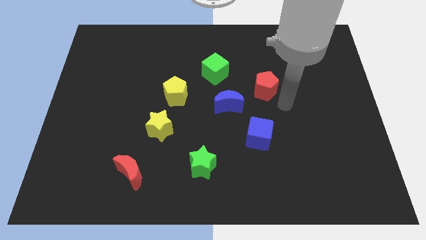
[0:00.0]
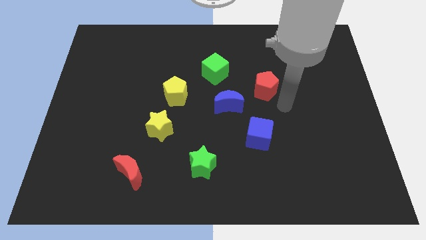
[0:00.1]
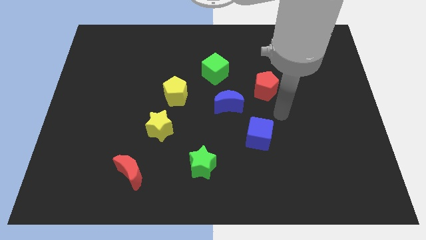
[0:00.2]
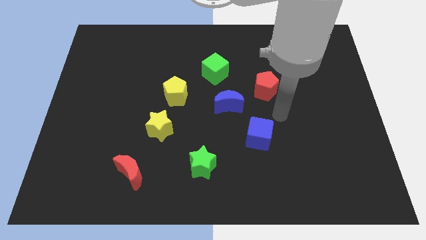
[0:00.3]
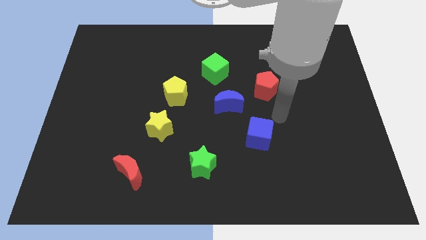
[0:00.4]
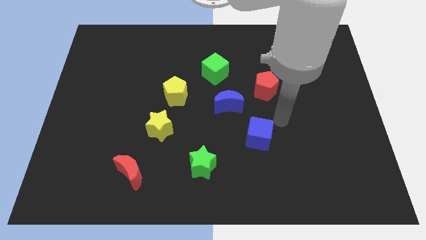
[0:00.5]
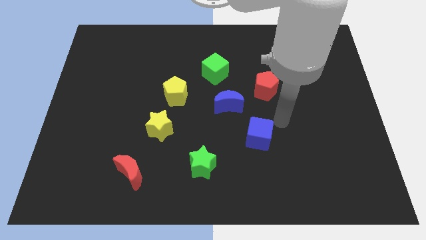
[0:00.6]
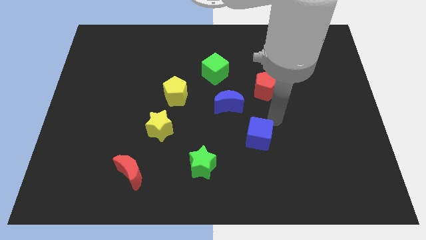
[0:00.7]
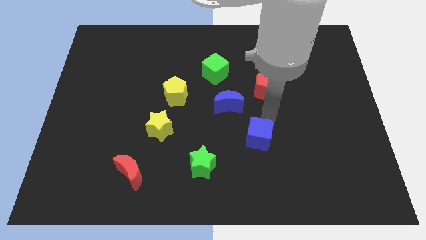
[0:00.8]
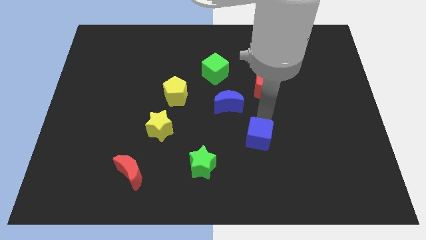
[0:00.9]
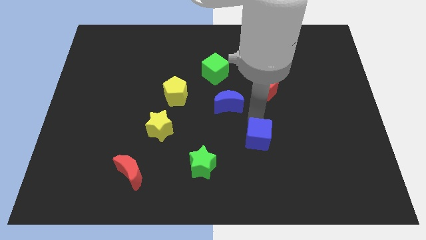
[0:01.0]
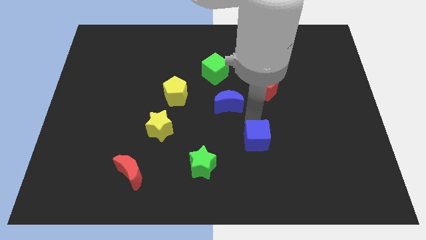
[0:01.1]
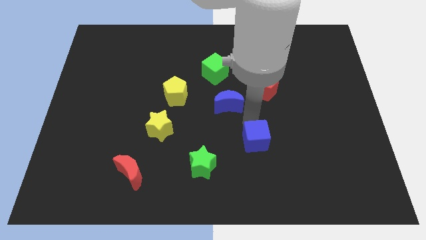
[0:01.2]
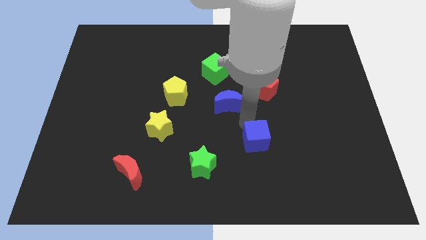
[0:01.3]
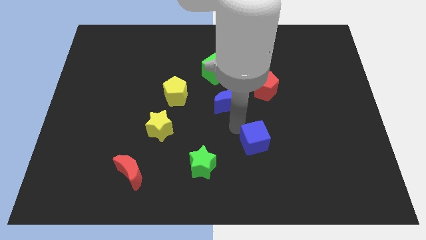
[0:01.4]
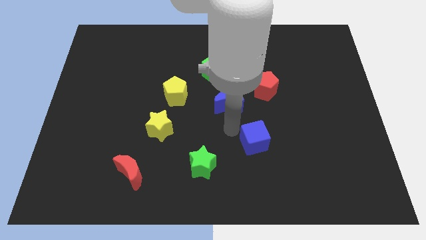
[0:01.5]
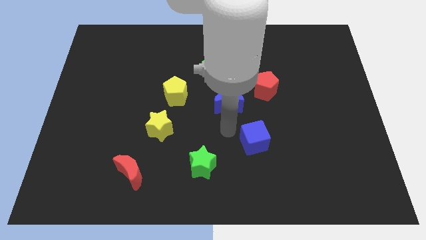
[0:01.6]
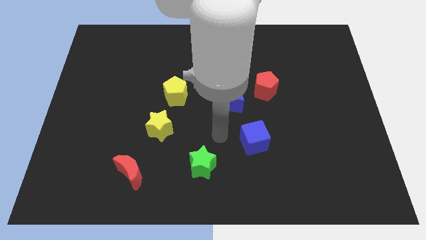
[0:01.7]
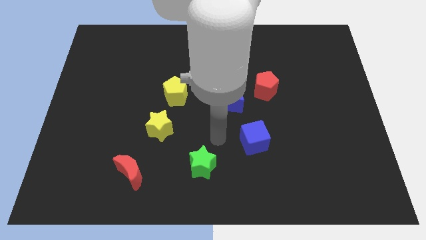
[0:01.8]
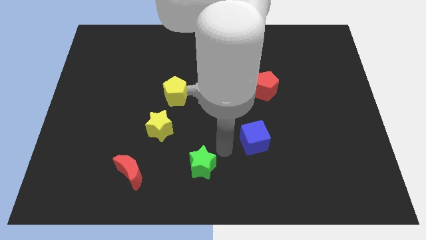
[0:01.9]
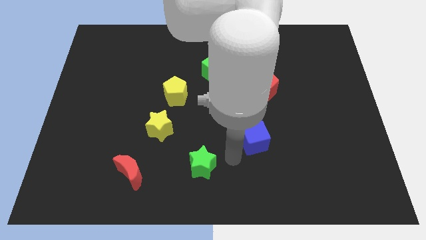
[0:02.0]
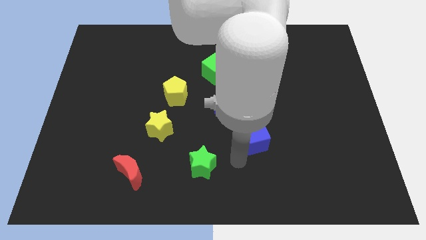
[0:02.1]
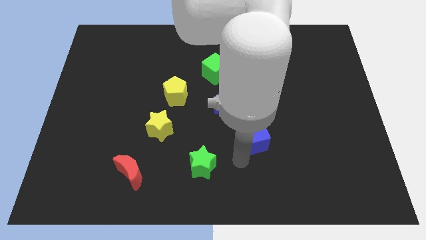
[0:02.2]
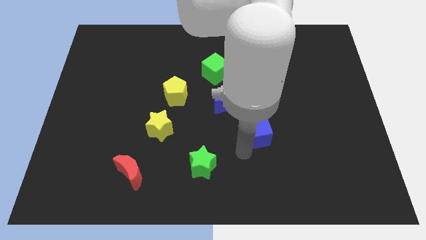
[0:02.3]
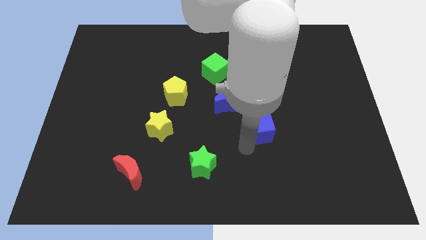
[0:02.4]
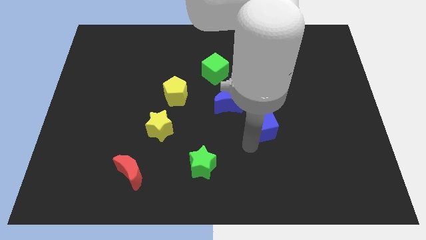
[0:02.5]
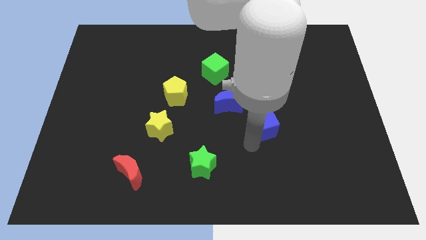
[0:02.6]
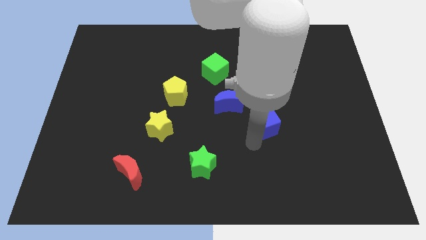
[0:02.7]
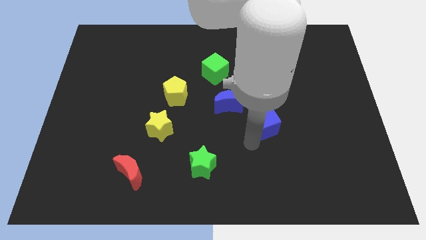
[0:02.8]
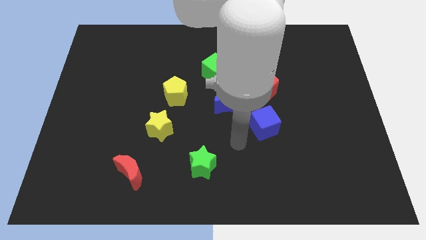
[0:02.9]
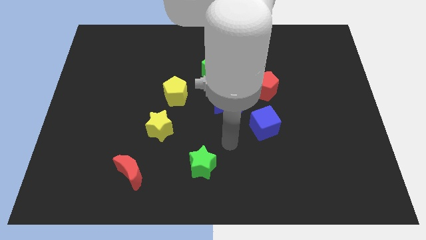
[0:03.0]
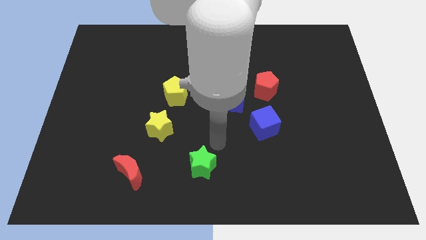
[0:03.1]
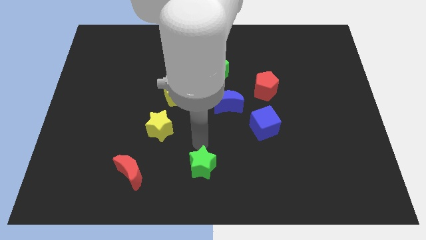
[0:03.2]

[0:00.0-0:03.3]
move the blue cube to the bottom right side of the blue moon

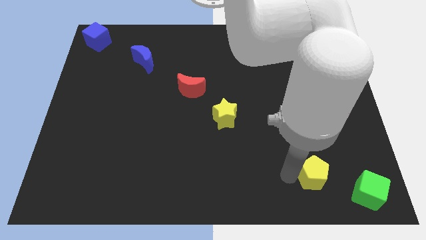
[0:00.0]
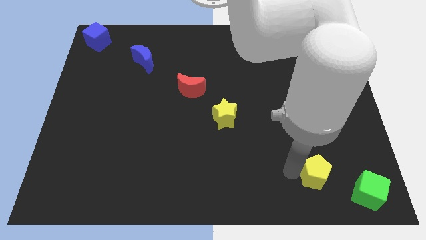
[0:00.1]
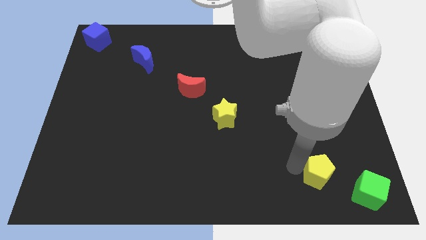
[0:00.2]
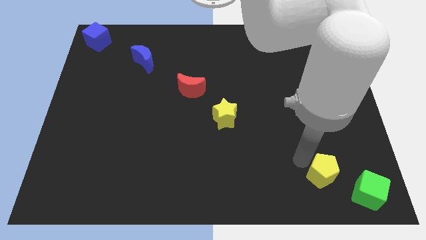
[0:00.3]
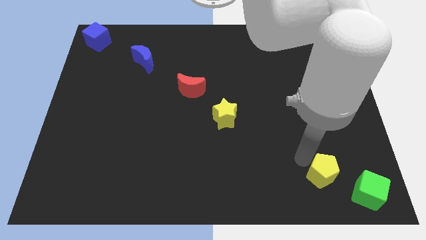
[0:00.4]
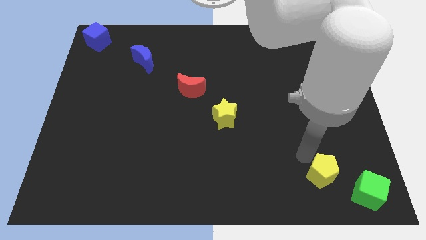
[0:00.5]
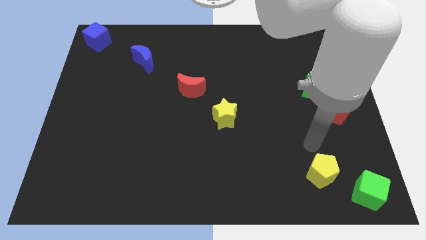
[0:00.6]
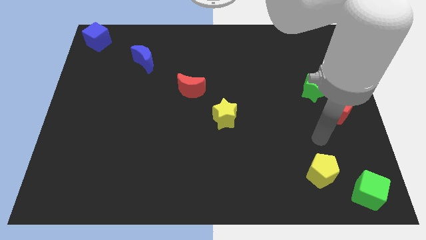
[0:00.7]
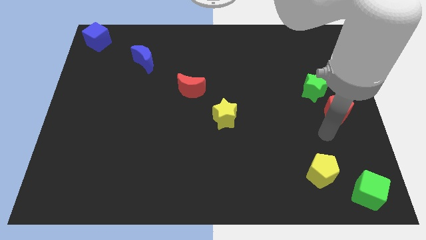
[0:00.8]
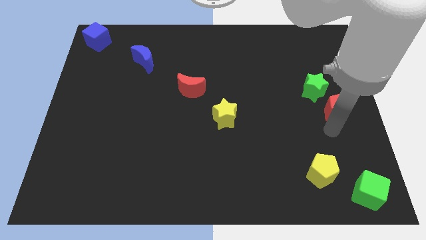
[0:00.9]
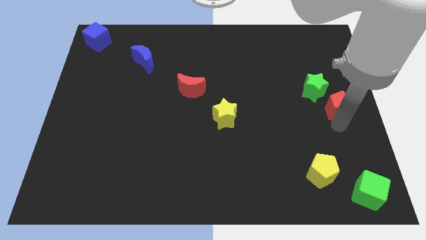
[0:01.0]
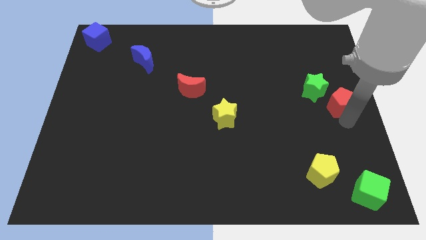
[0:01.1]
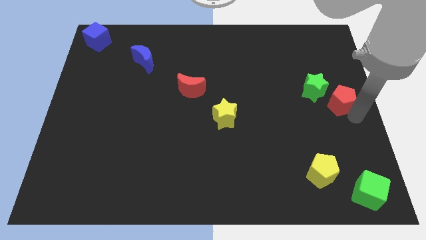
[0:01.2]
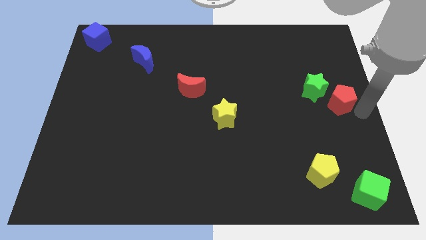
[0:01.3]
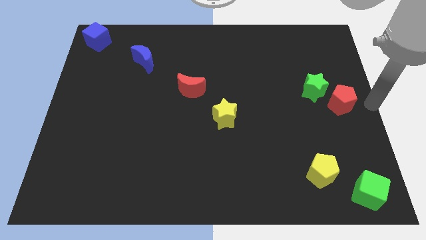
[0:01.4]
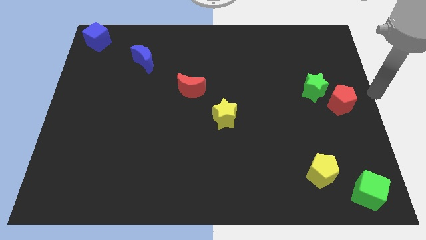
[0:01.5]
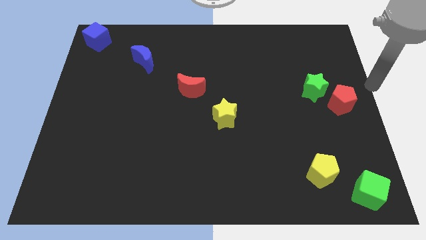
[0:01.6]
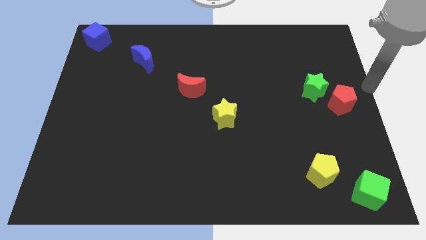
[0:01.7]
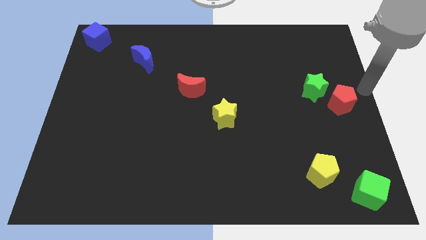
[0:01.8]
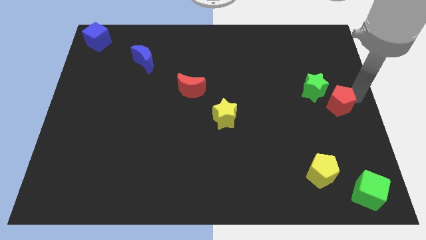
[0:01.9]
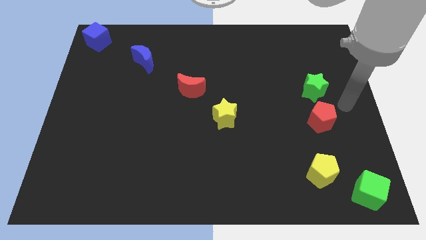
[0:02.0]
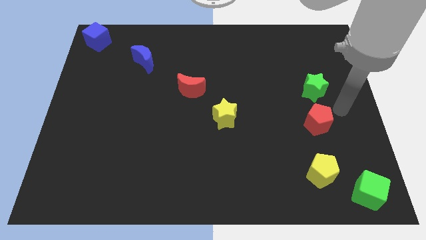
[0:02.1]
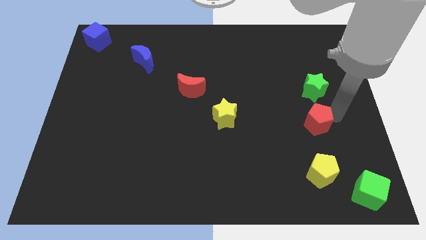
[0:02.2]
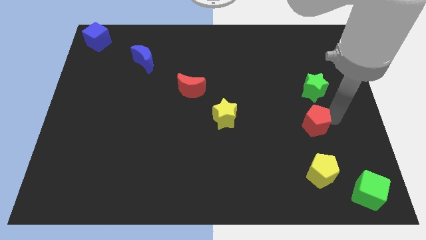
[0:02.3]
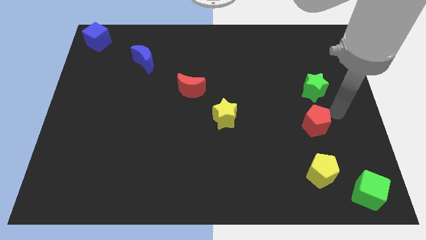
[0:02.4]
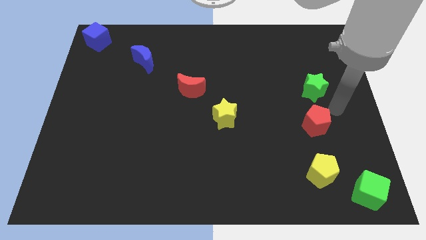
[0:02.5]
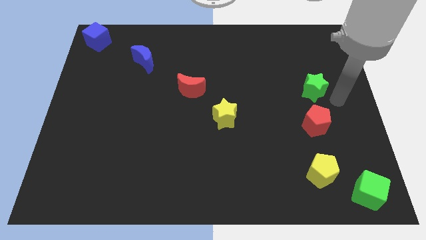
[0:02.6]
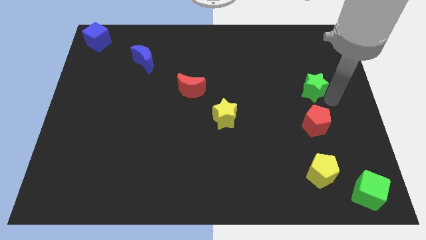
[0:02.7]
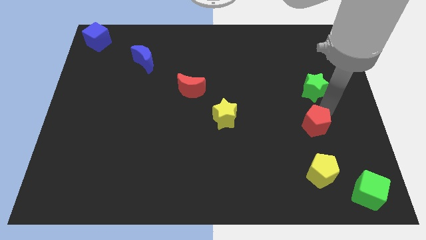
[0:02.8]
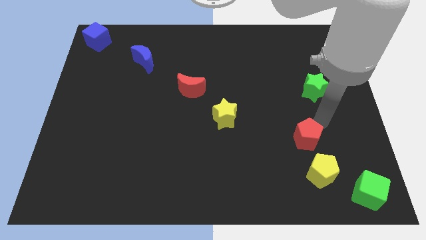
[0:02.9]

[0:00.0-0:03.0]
place red pentagon below green star

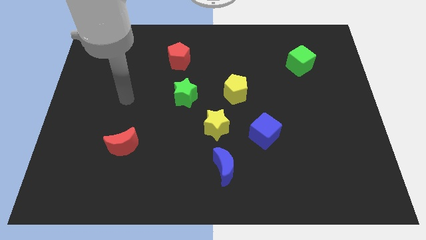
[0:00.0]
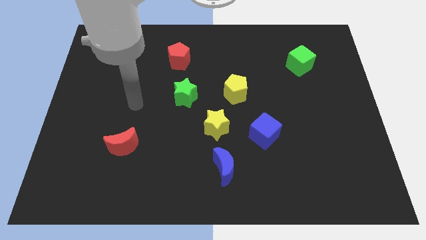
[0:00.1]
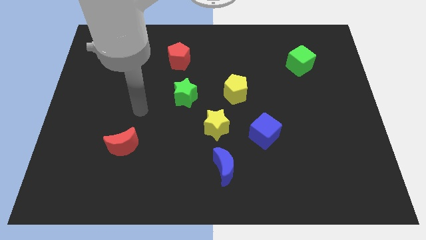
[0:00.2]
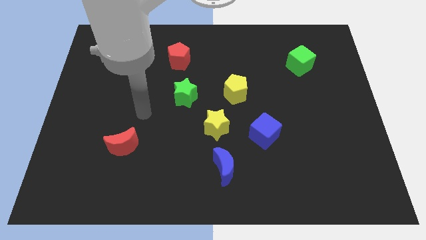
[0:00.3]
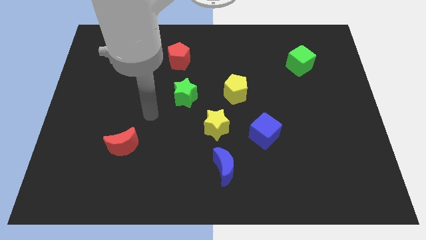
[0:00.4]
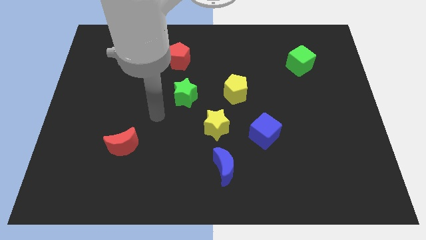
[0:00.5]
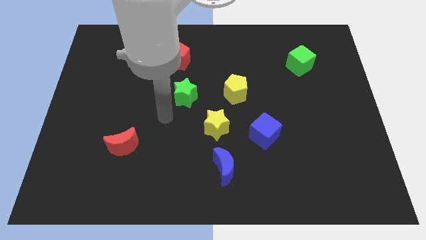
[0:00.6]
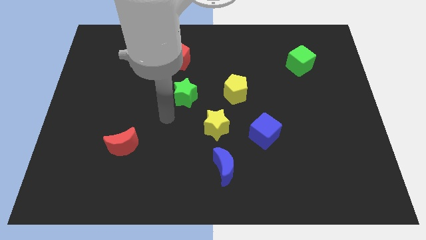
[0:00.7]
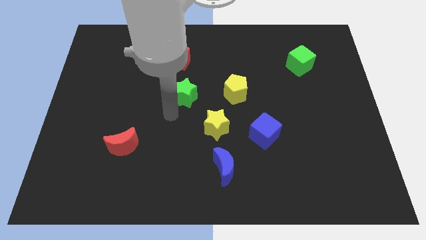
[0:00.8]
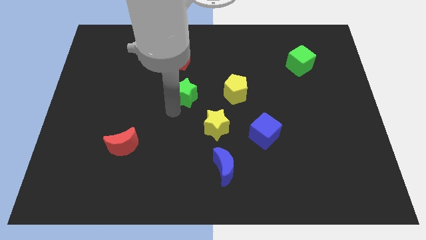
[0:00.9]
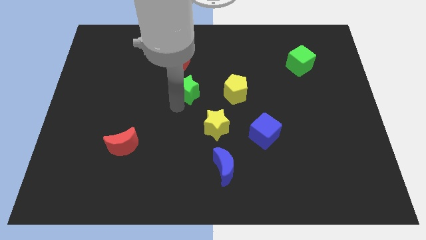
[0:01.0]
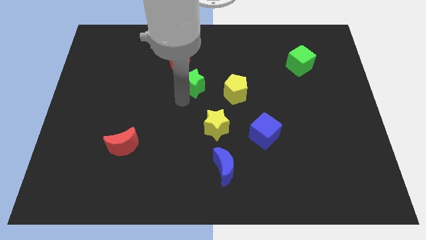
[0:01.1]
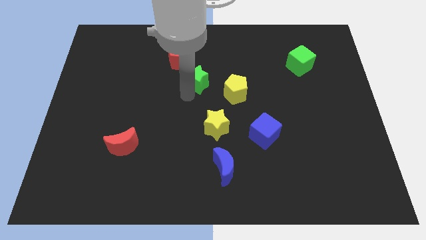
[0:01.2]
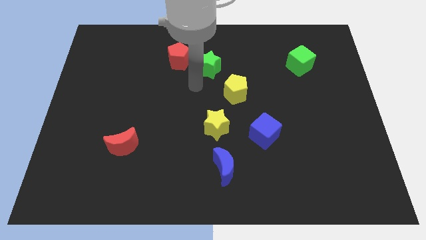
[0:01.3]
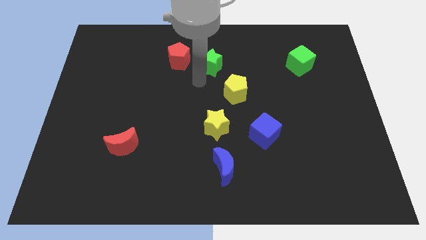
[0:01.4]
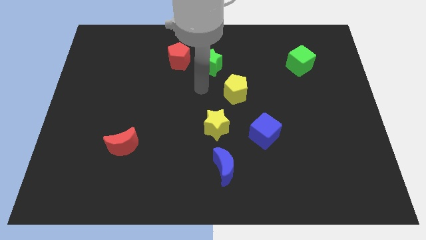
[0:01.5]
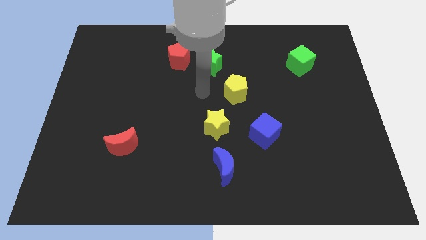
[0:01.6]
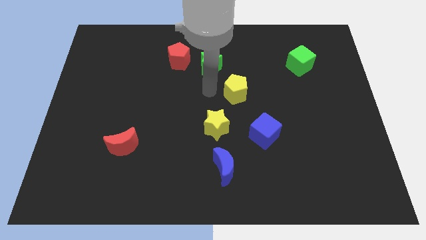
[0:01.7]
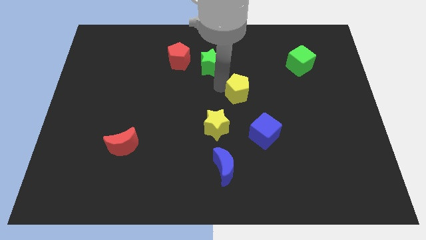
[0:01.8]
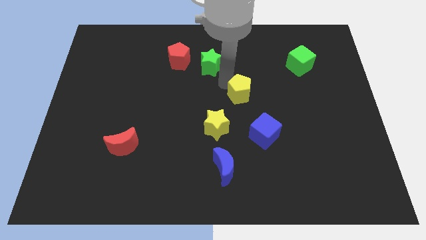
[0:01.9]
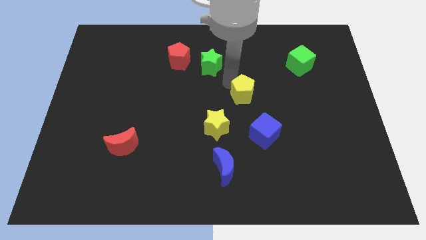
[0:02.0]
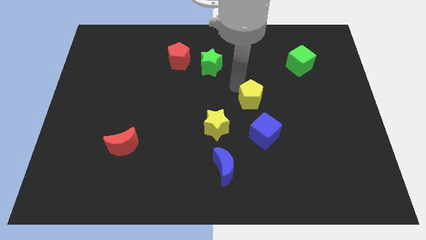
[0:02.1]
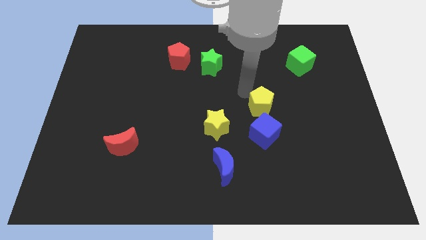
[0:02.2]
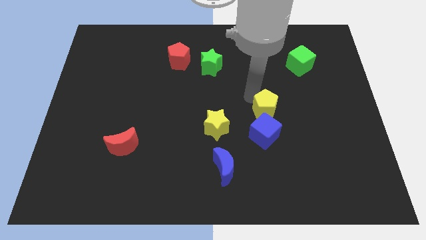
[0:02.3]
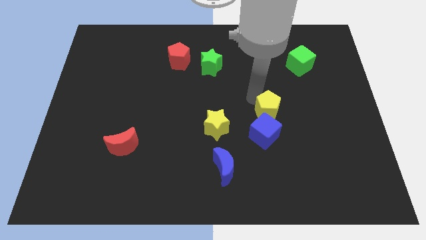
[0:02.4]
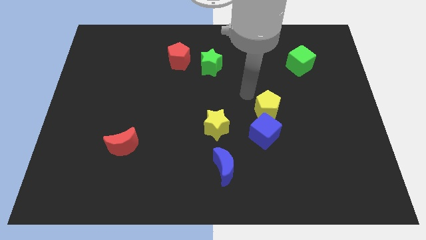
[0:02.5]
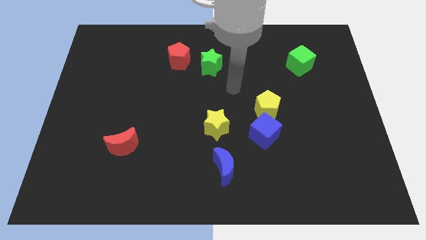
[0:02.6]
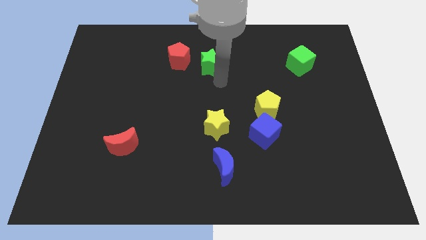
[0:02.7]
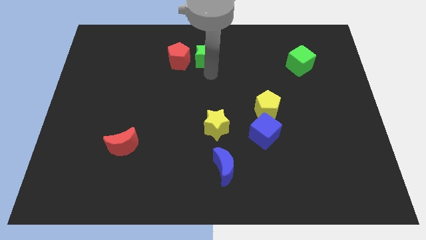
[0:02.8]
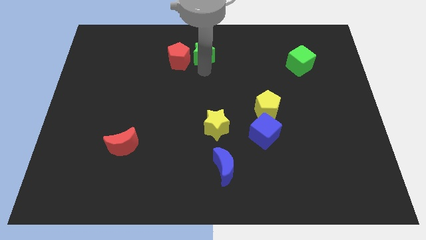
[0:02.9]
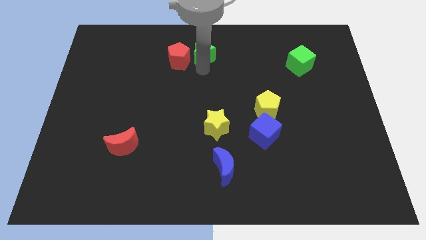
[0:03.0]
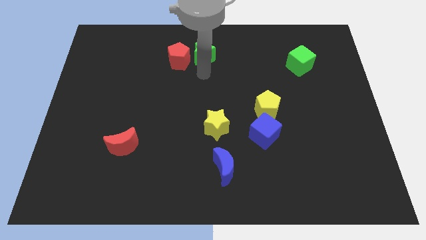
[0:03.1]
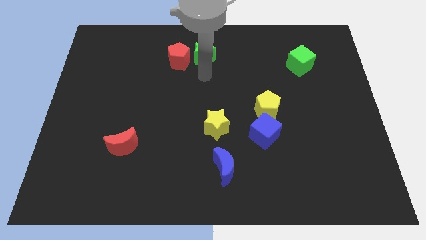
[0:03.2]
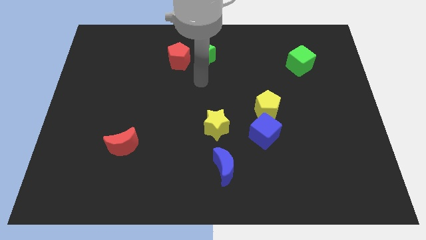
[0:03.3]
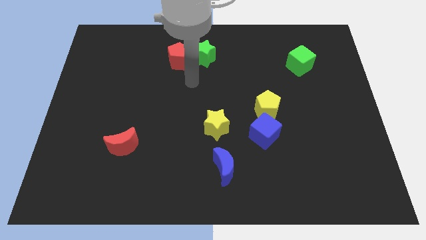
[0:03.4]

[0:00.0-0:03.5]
place the green star right to the red pentagon
